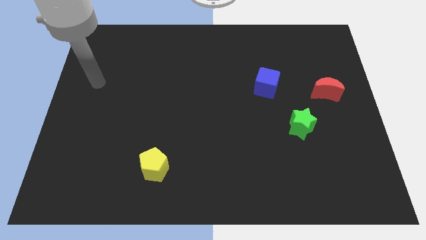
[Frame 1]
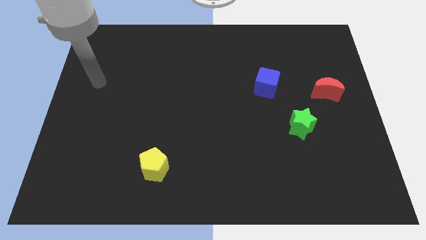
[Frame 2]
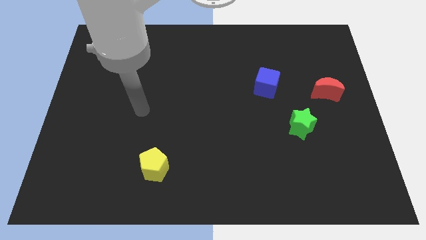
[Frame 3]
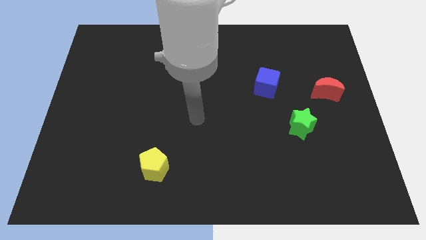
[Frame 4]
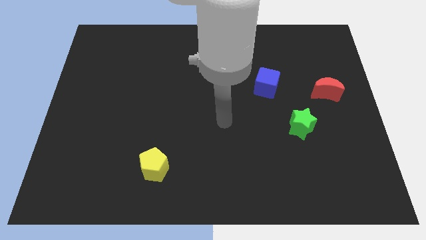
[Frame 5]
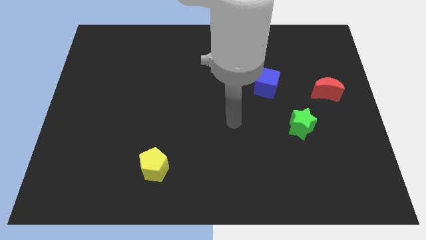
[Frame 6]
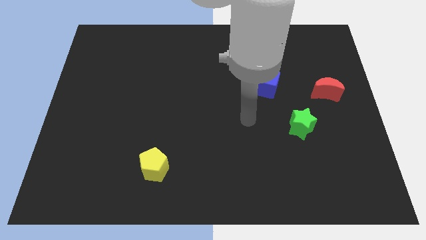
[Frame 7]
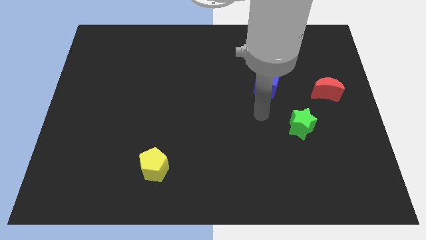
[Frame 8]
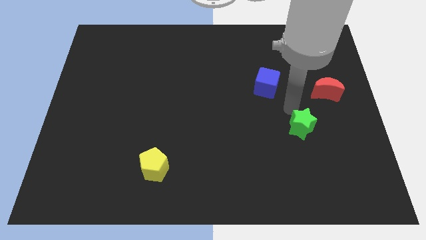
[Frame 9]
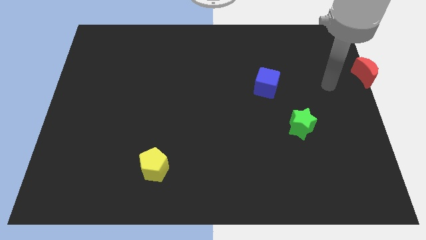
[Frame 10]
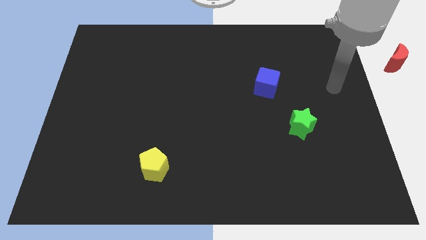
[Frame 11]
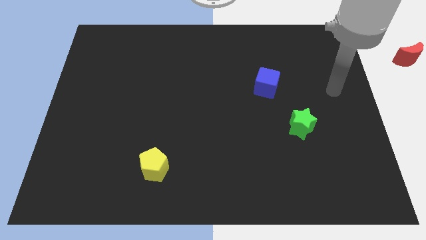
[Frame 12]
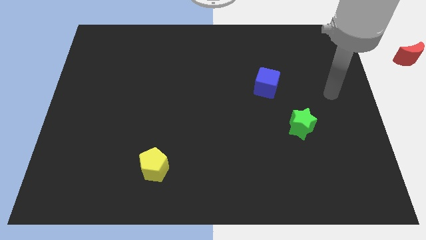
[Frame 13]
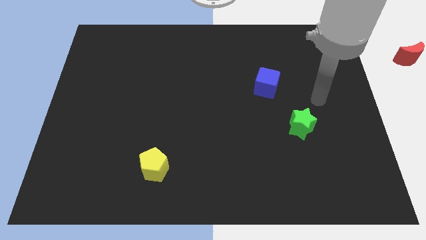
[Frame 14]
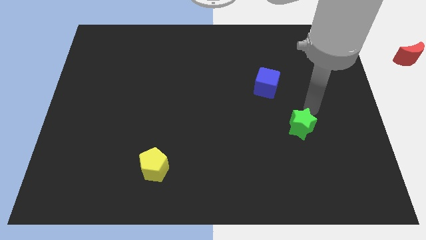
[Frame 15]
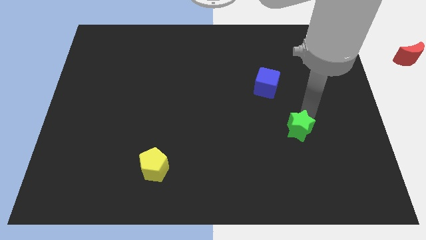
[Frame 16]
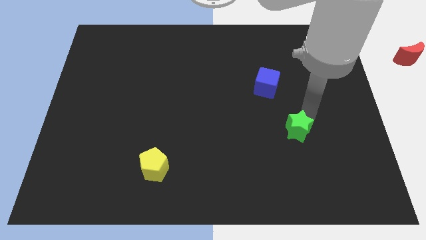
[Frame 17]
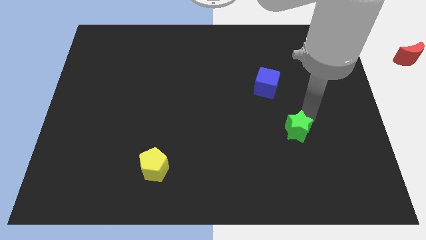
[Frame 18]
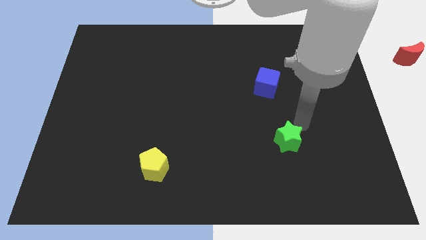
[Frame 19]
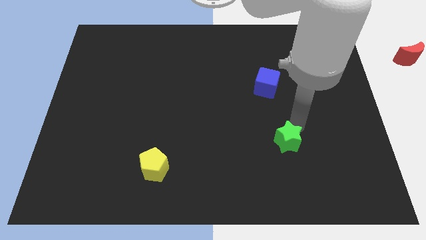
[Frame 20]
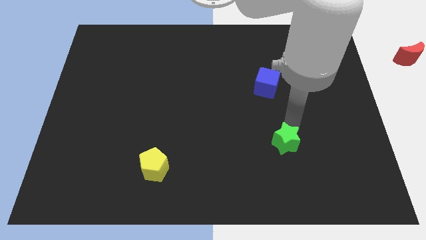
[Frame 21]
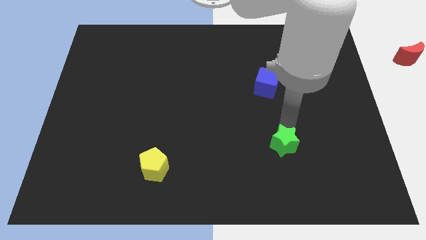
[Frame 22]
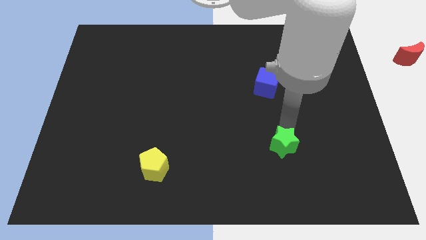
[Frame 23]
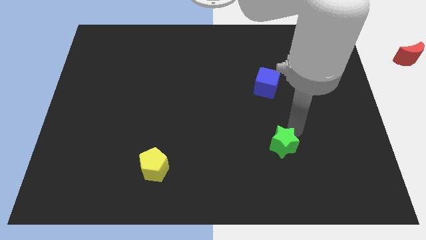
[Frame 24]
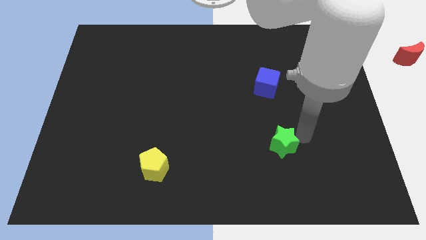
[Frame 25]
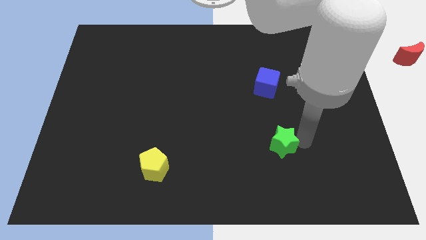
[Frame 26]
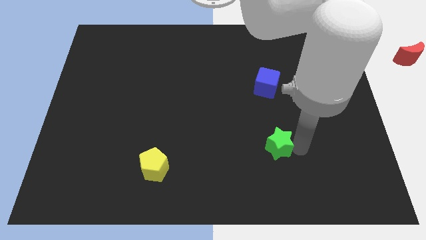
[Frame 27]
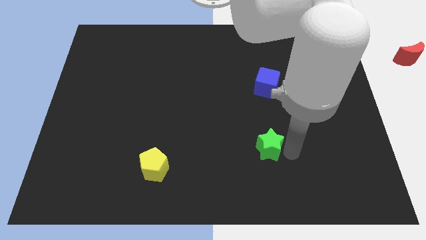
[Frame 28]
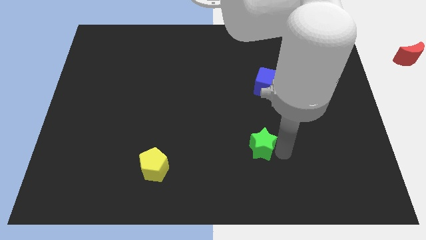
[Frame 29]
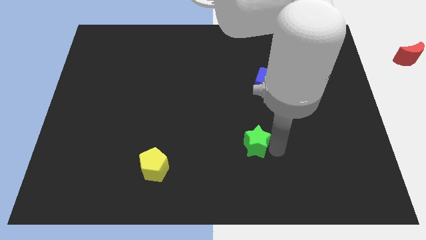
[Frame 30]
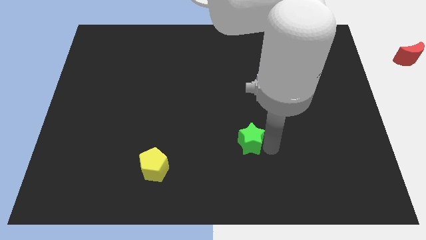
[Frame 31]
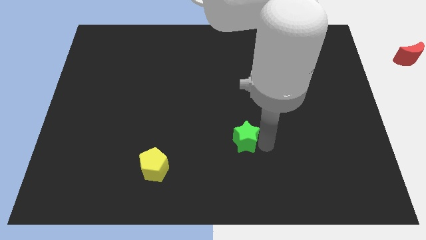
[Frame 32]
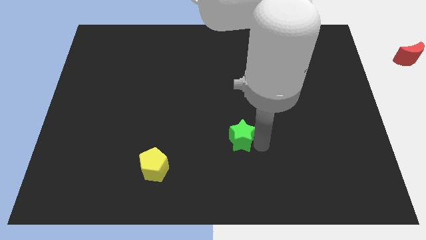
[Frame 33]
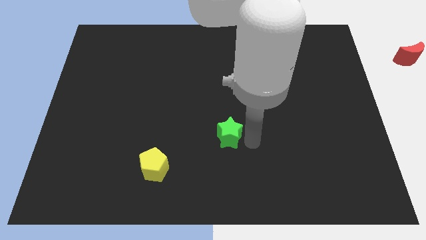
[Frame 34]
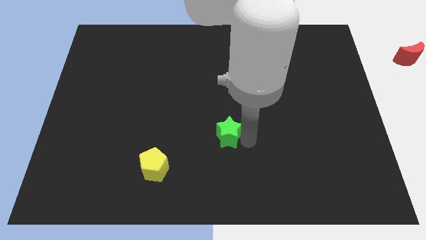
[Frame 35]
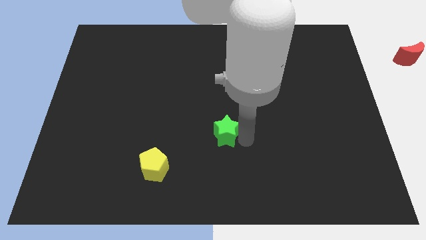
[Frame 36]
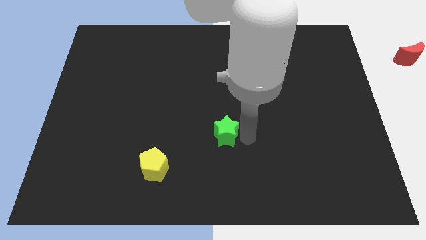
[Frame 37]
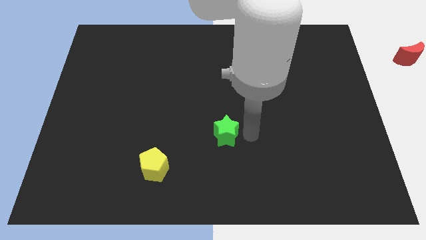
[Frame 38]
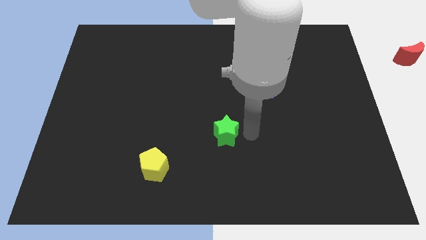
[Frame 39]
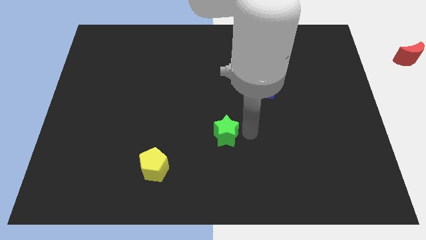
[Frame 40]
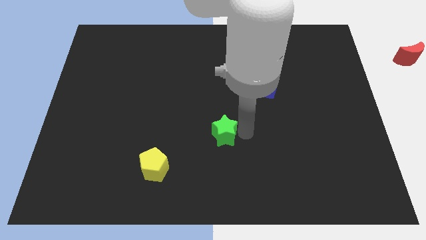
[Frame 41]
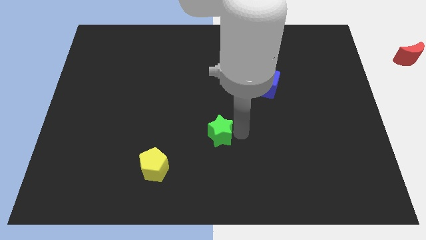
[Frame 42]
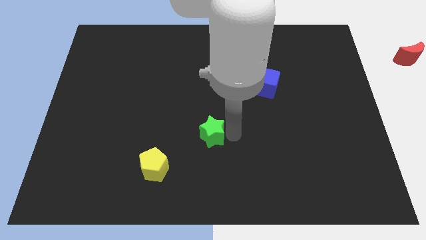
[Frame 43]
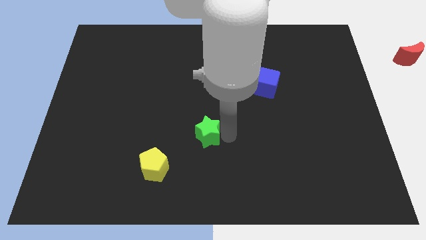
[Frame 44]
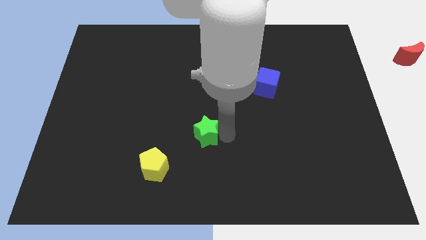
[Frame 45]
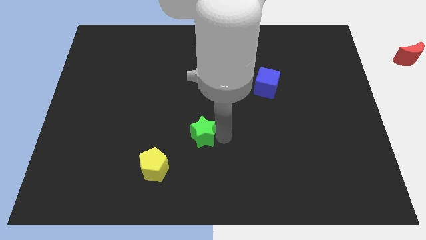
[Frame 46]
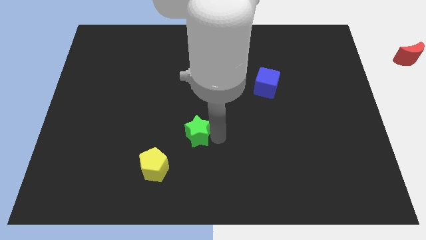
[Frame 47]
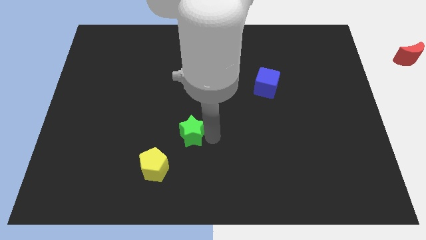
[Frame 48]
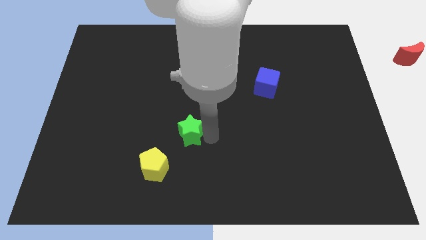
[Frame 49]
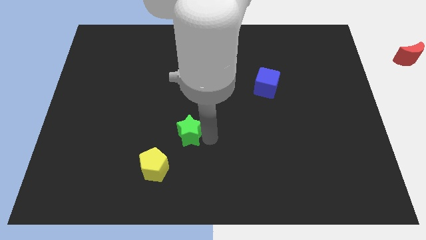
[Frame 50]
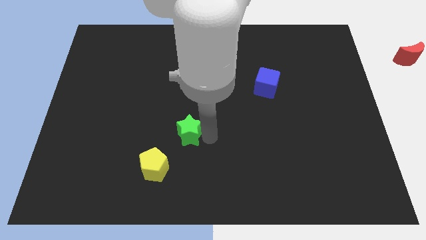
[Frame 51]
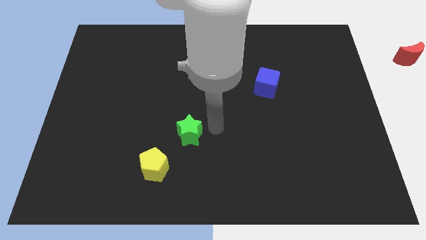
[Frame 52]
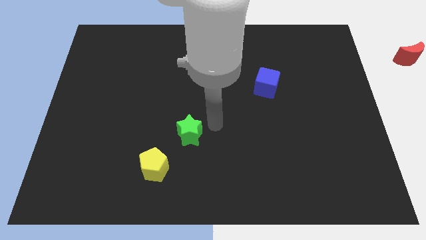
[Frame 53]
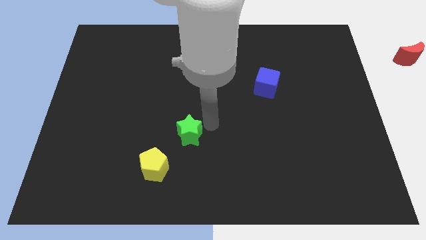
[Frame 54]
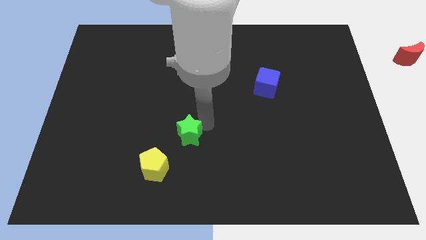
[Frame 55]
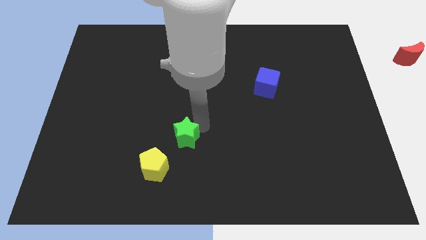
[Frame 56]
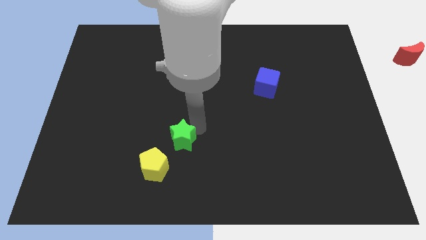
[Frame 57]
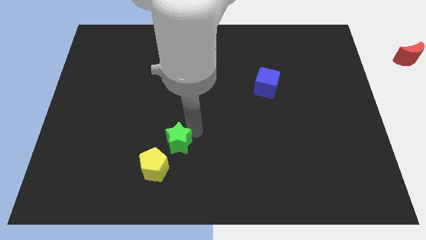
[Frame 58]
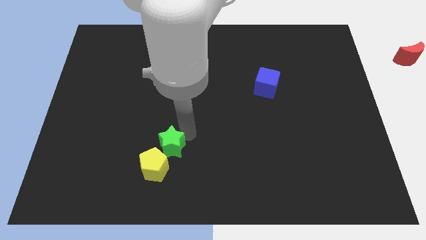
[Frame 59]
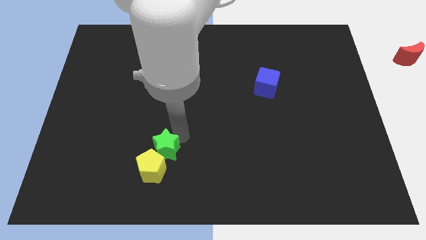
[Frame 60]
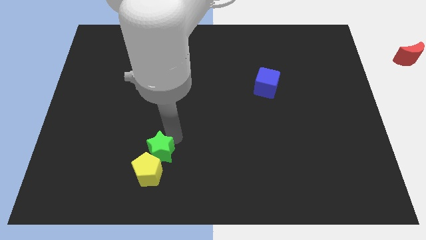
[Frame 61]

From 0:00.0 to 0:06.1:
move the green star towards the pentagon

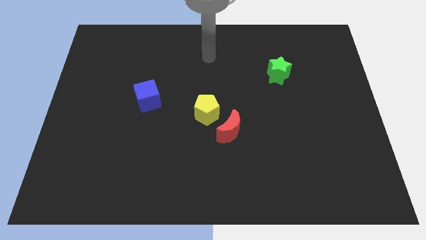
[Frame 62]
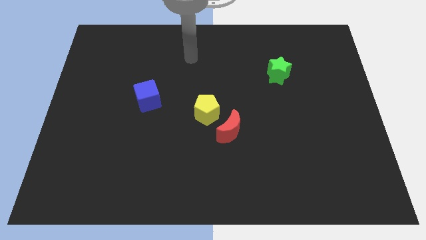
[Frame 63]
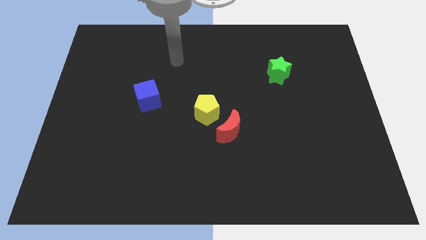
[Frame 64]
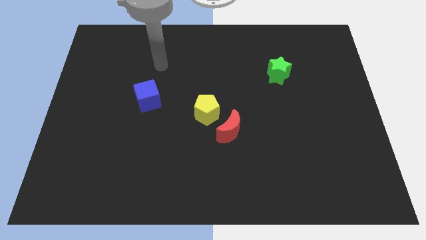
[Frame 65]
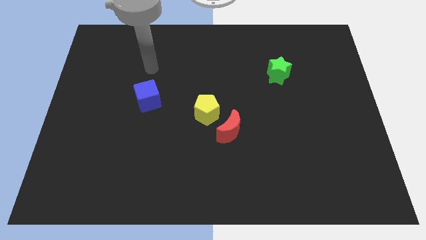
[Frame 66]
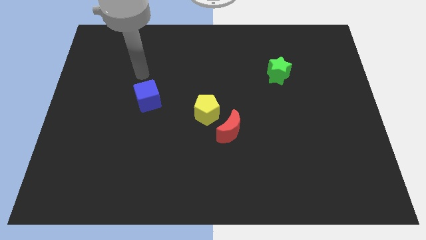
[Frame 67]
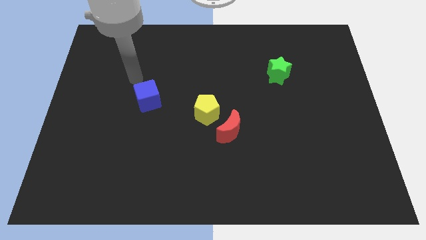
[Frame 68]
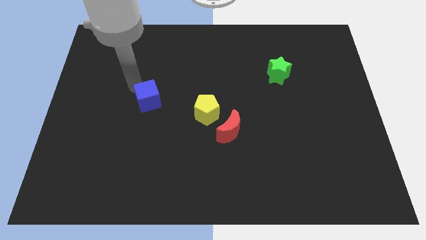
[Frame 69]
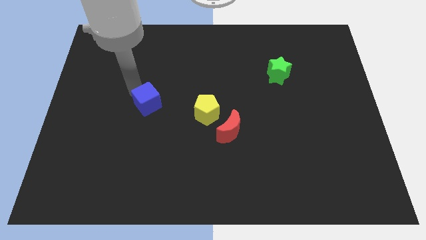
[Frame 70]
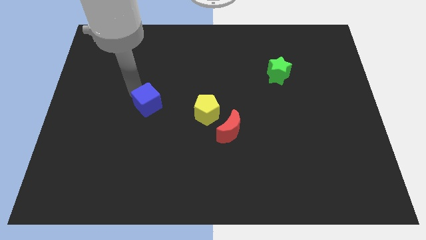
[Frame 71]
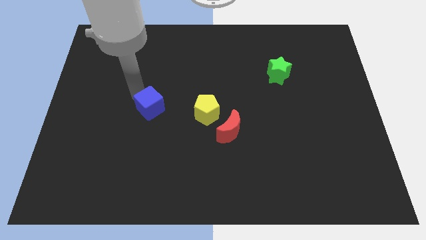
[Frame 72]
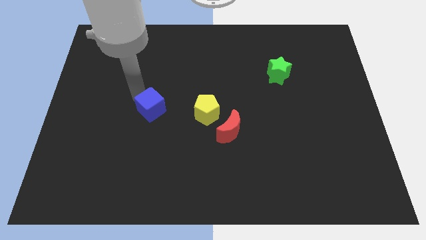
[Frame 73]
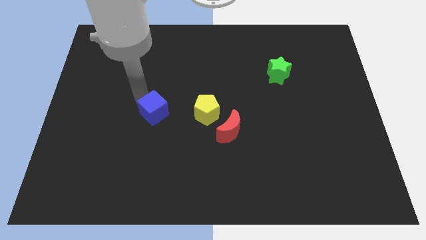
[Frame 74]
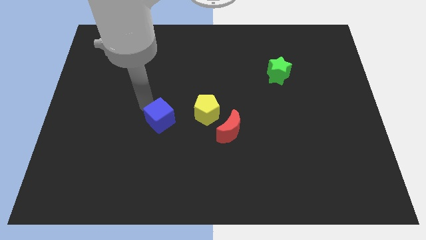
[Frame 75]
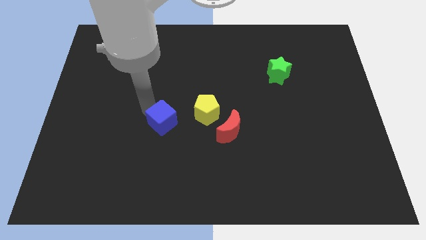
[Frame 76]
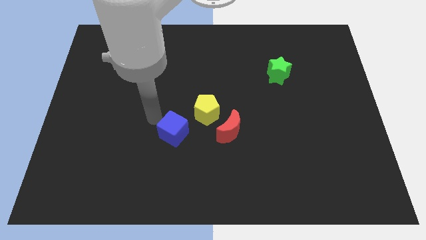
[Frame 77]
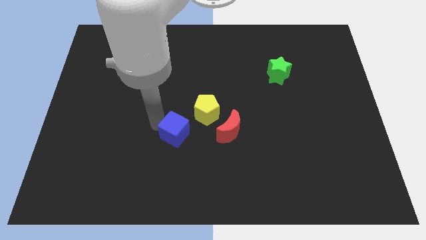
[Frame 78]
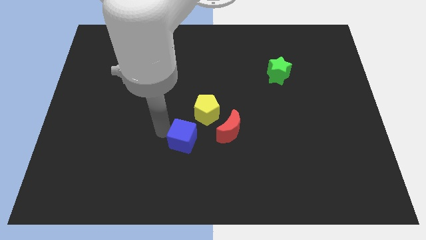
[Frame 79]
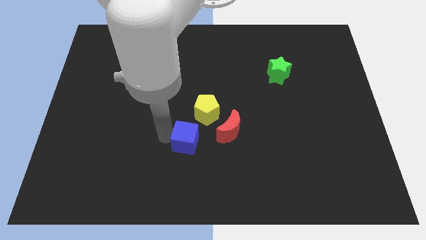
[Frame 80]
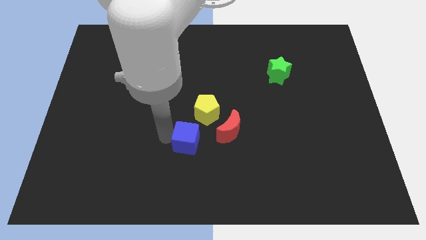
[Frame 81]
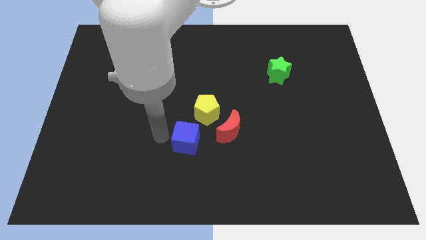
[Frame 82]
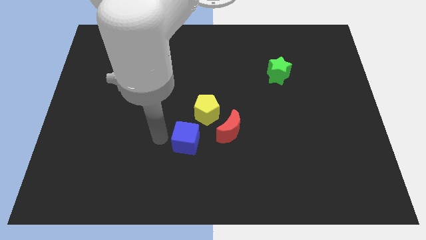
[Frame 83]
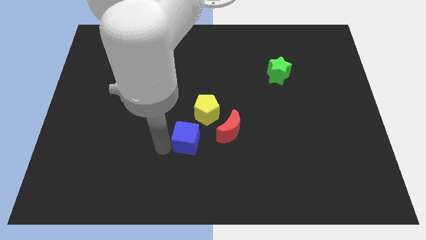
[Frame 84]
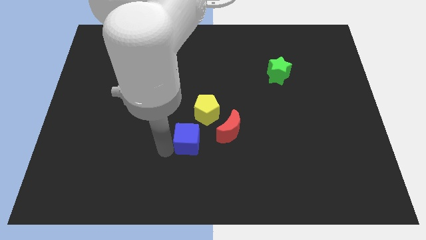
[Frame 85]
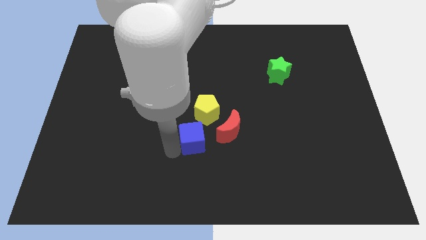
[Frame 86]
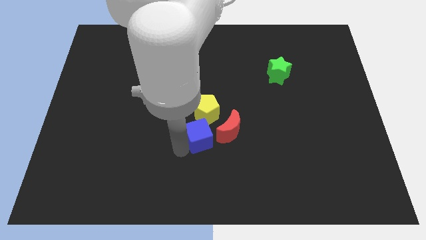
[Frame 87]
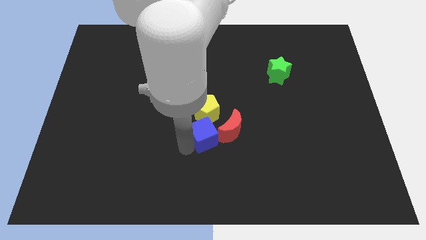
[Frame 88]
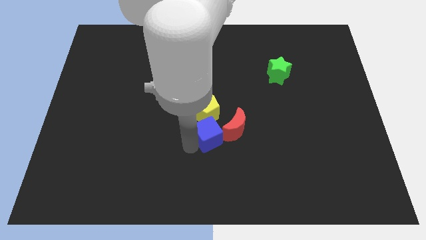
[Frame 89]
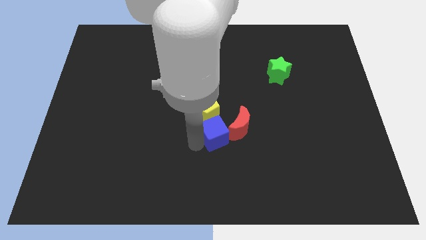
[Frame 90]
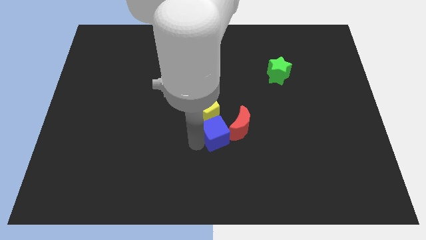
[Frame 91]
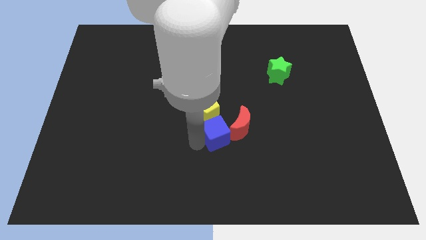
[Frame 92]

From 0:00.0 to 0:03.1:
push the blue block towards the moon
